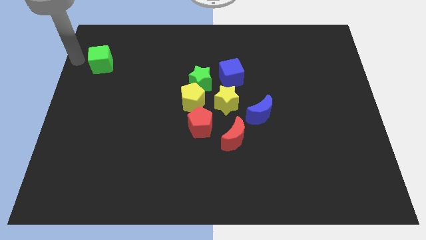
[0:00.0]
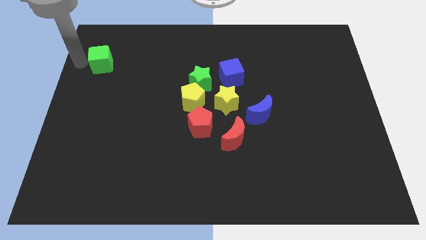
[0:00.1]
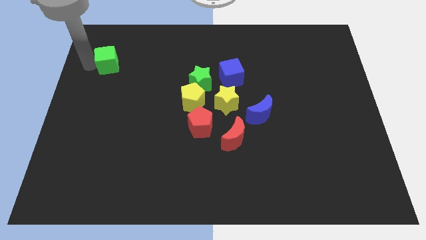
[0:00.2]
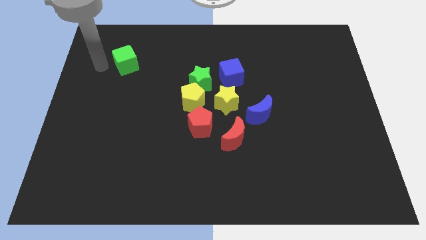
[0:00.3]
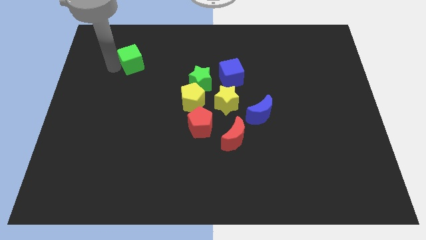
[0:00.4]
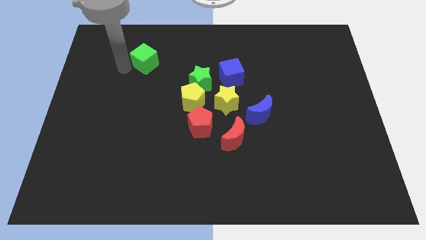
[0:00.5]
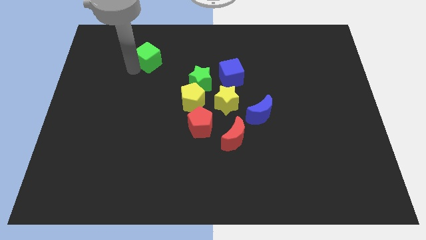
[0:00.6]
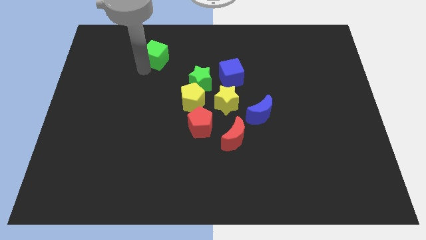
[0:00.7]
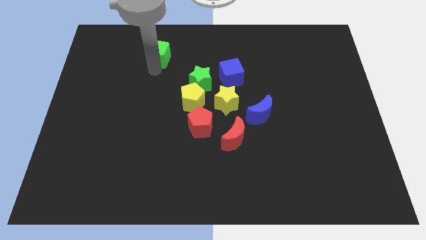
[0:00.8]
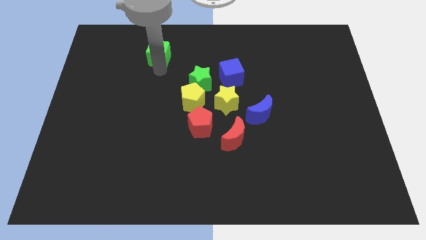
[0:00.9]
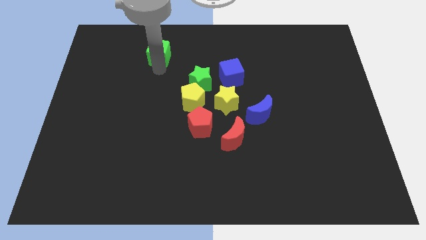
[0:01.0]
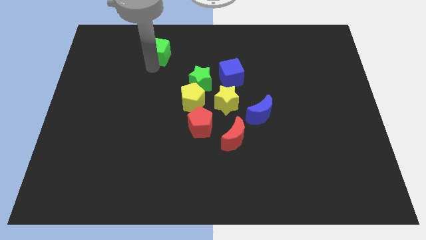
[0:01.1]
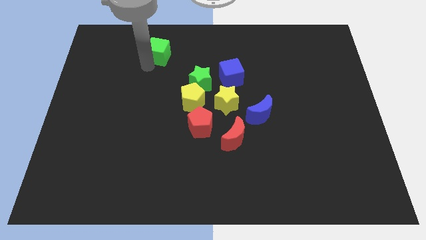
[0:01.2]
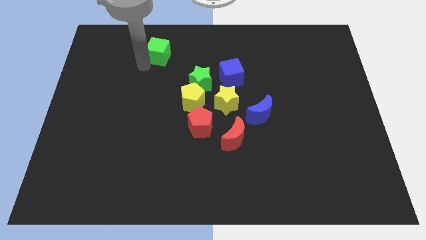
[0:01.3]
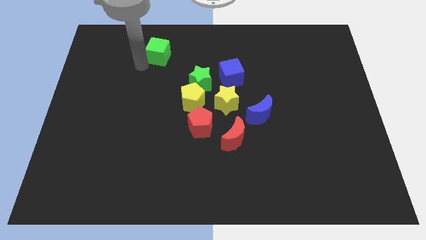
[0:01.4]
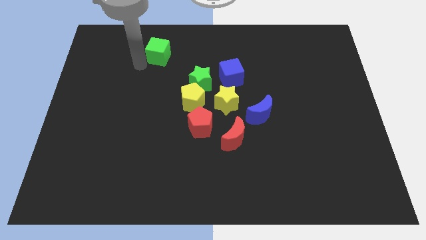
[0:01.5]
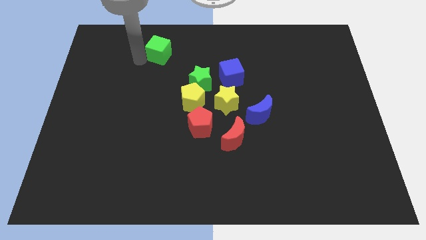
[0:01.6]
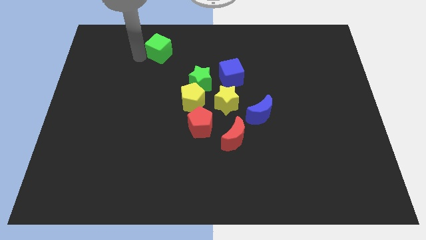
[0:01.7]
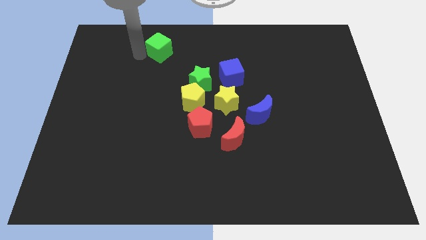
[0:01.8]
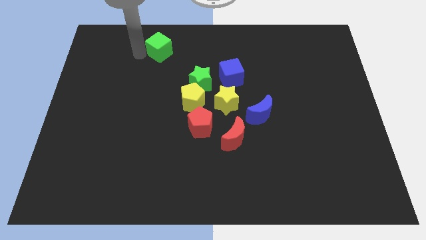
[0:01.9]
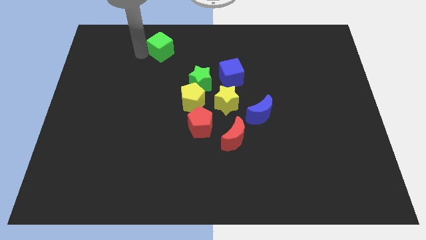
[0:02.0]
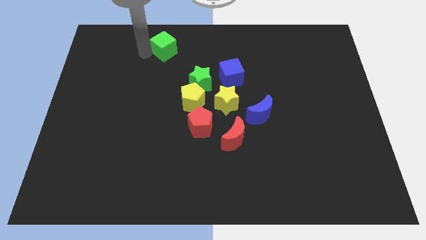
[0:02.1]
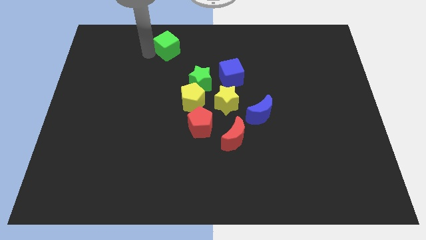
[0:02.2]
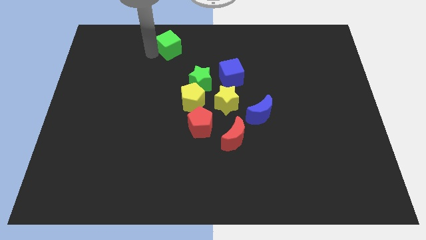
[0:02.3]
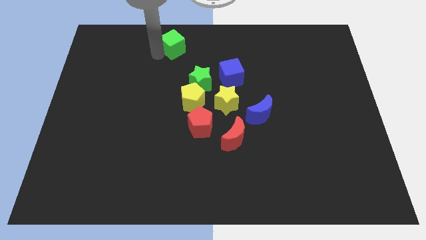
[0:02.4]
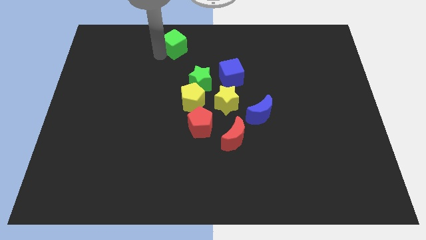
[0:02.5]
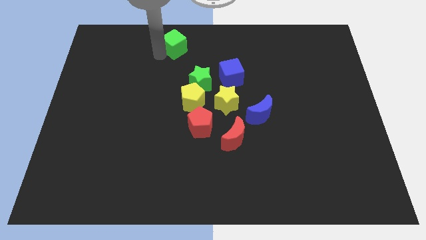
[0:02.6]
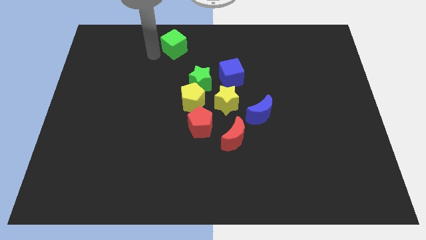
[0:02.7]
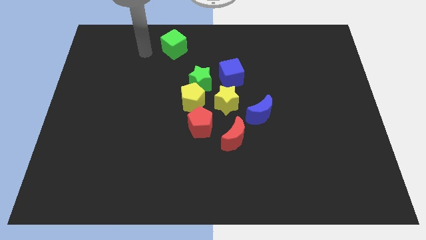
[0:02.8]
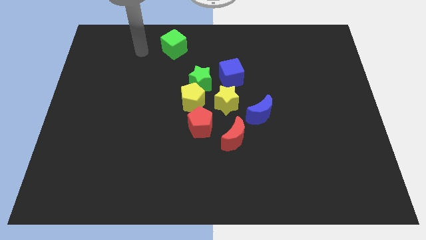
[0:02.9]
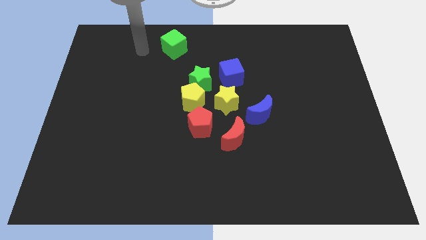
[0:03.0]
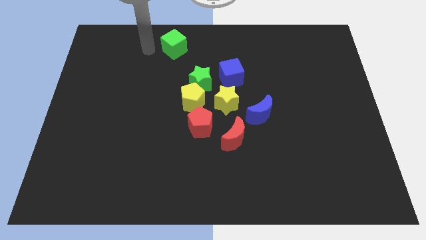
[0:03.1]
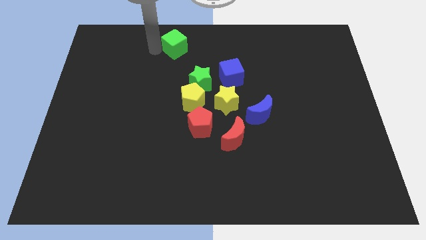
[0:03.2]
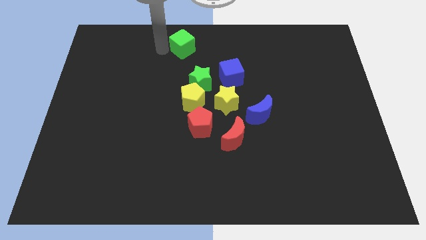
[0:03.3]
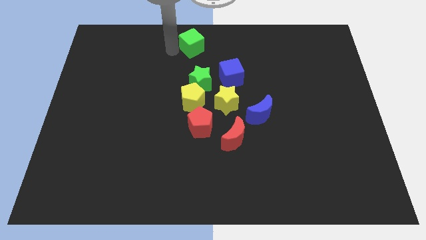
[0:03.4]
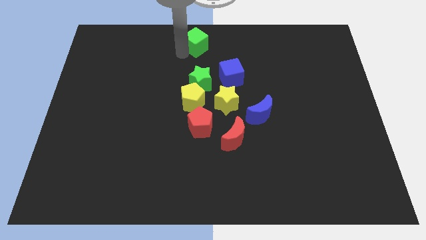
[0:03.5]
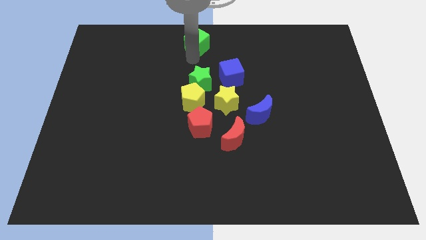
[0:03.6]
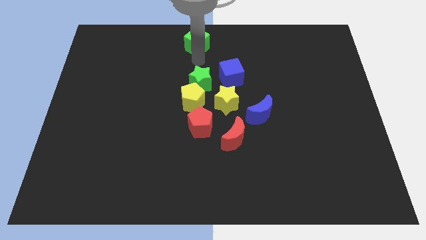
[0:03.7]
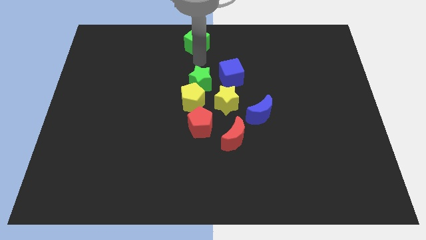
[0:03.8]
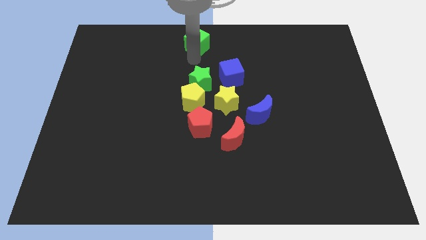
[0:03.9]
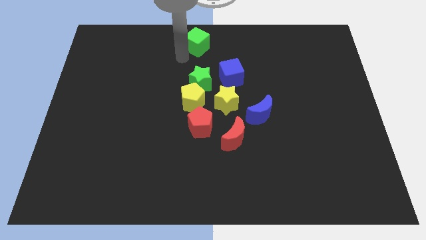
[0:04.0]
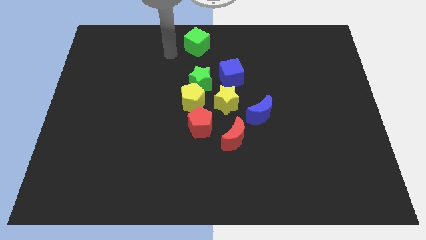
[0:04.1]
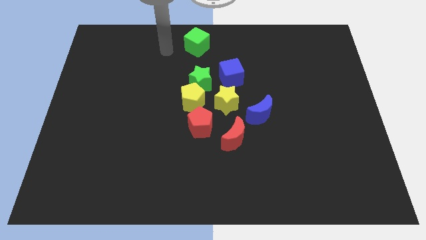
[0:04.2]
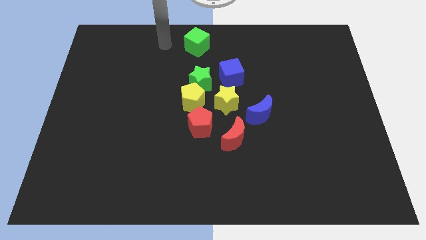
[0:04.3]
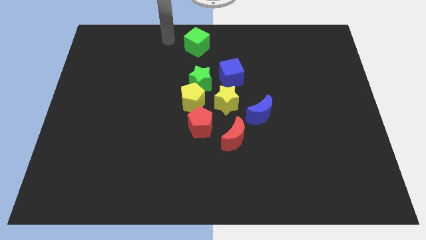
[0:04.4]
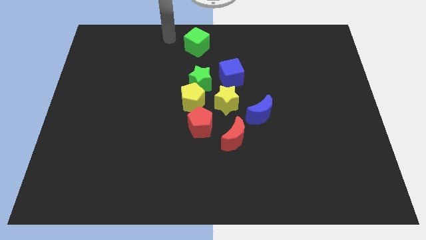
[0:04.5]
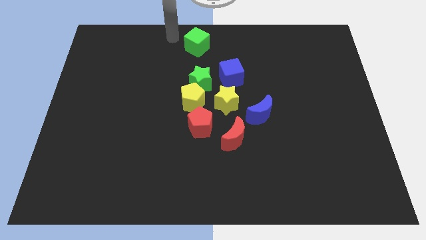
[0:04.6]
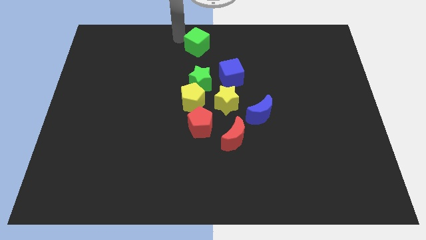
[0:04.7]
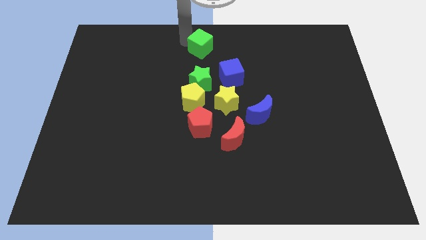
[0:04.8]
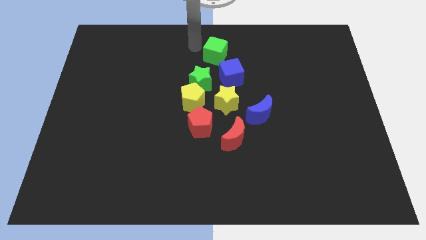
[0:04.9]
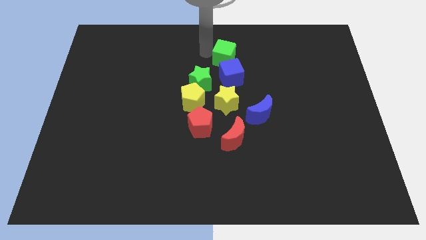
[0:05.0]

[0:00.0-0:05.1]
place the green cube above the blue cube

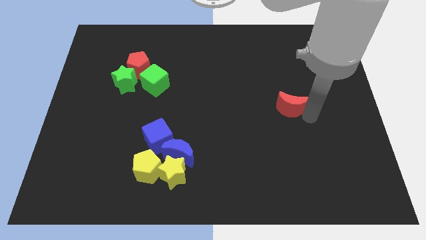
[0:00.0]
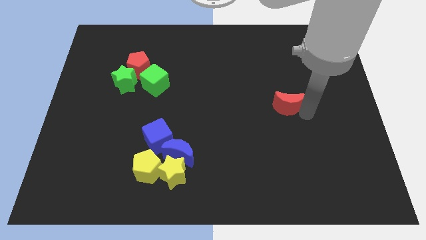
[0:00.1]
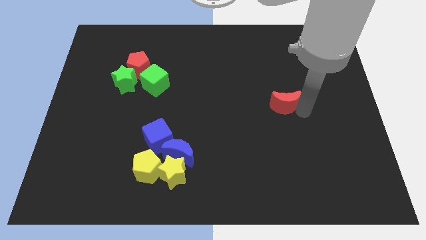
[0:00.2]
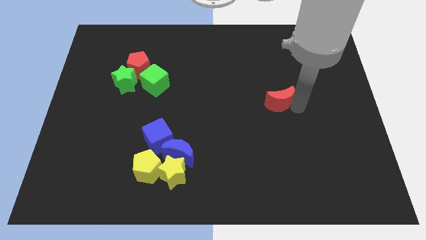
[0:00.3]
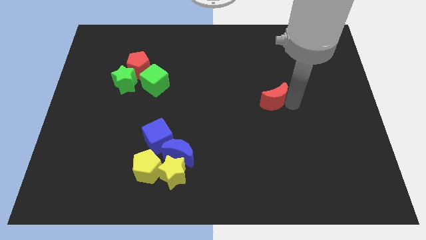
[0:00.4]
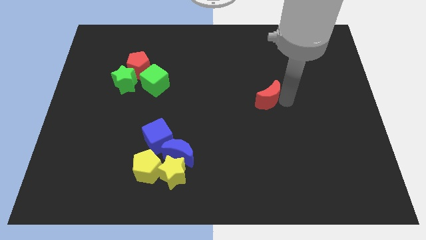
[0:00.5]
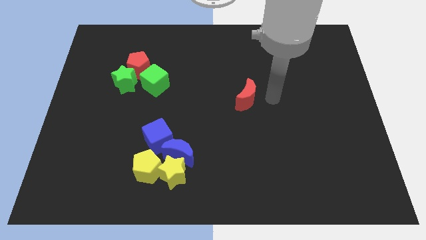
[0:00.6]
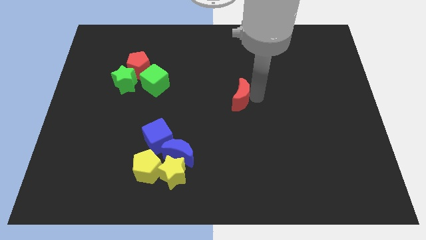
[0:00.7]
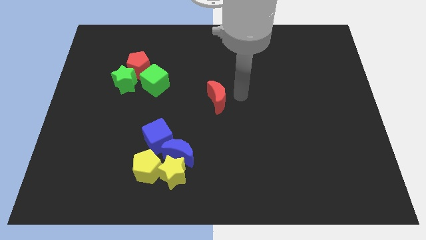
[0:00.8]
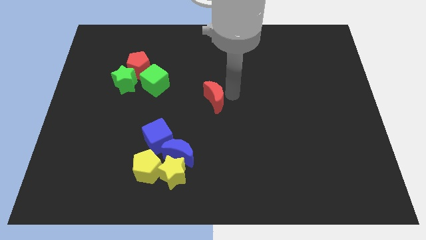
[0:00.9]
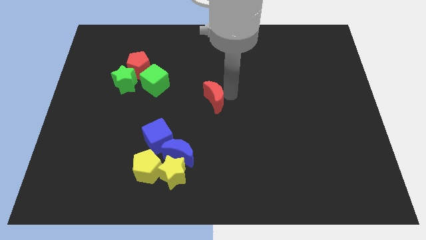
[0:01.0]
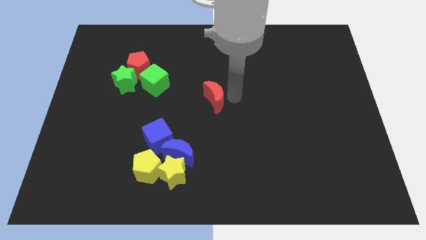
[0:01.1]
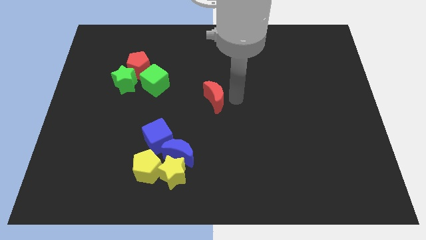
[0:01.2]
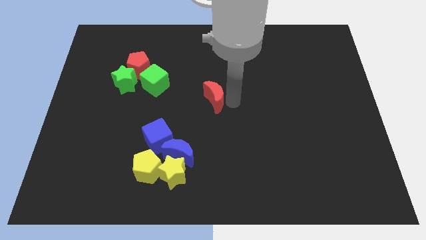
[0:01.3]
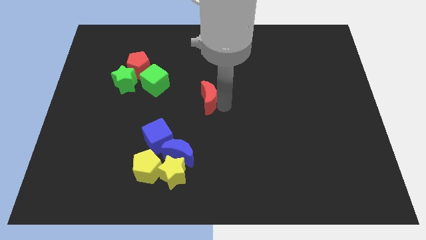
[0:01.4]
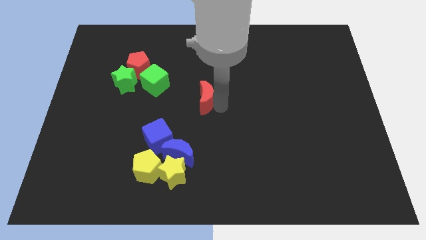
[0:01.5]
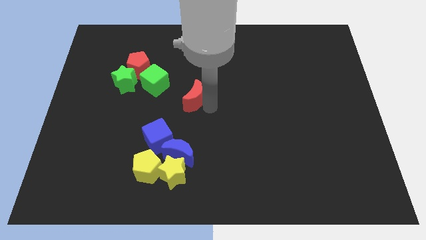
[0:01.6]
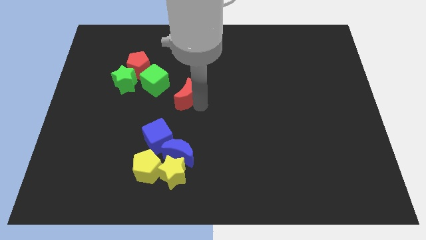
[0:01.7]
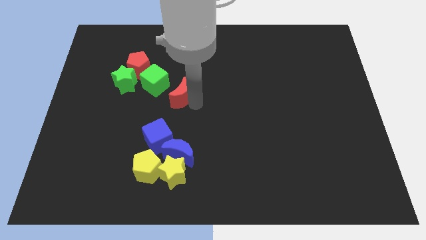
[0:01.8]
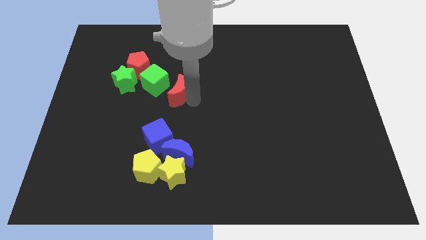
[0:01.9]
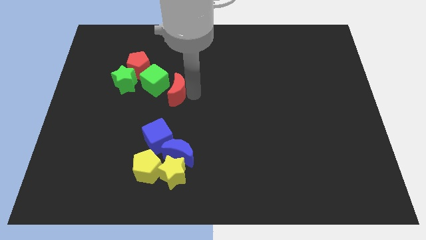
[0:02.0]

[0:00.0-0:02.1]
move the red crescent close to the green cube

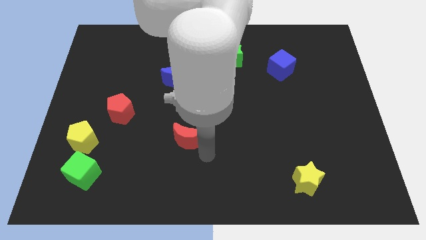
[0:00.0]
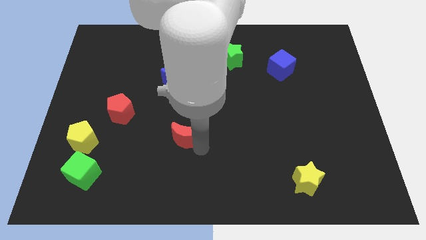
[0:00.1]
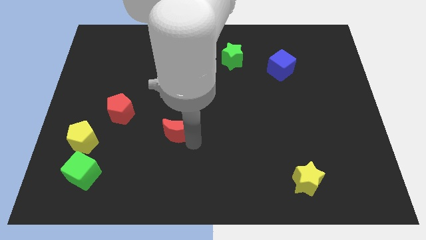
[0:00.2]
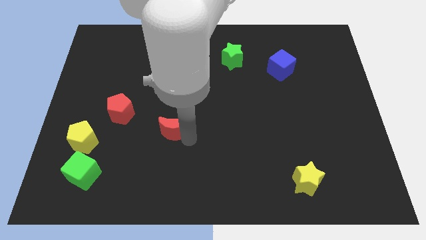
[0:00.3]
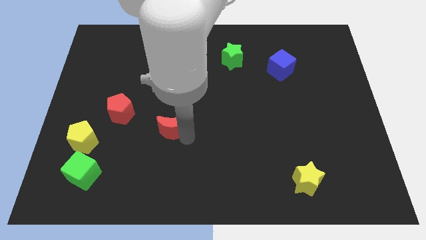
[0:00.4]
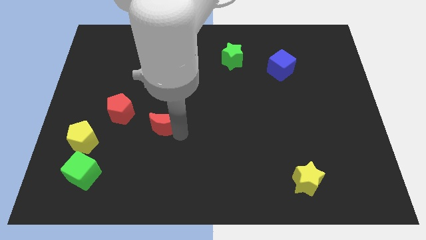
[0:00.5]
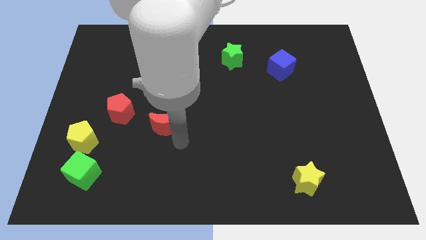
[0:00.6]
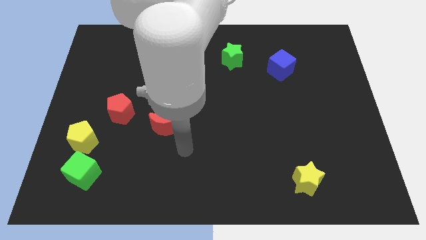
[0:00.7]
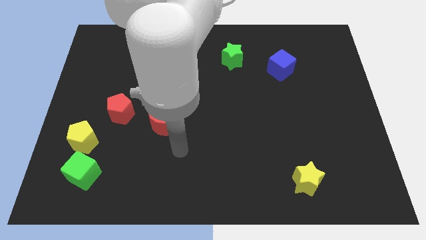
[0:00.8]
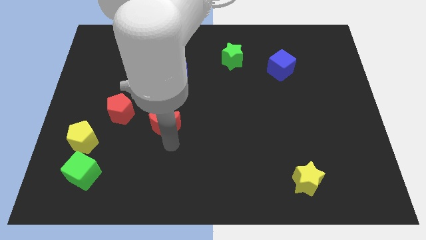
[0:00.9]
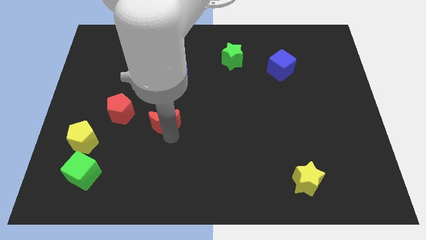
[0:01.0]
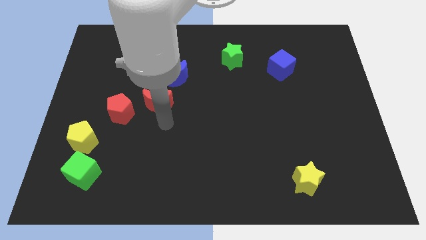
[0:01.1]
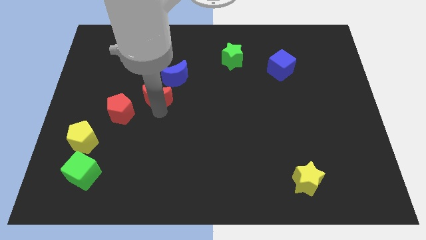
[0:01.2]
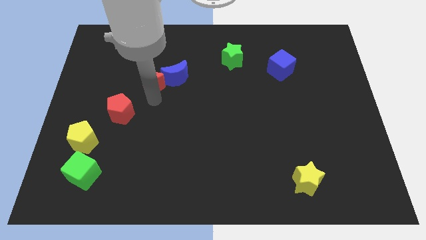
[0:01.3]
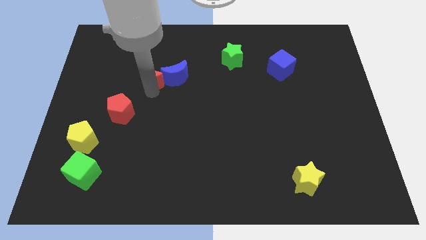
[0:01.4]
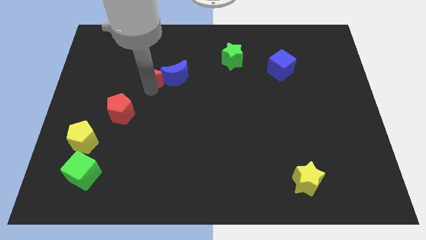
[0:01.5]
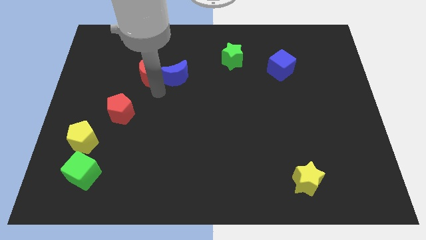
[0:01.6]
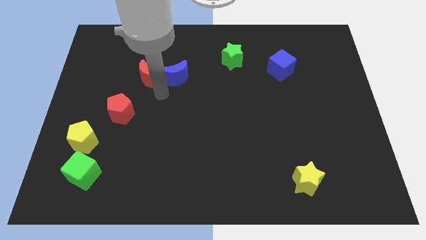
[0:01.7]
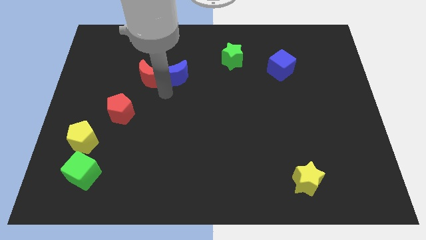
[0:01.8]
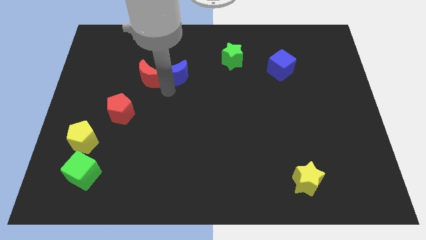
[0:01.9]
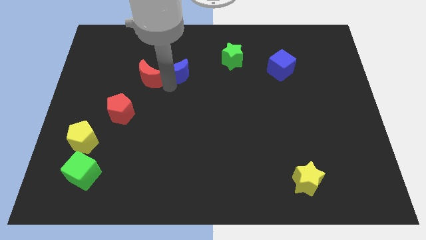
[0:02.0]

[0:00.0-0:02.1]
slide red moon into blue moon
